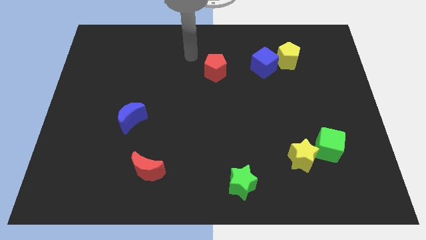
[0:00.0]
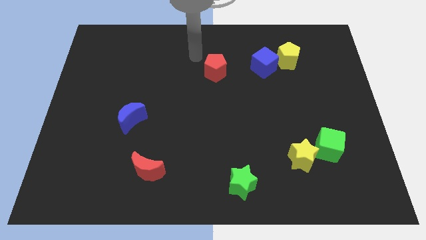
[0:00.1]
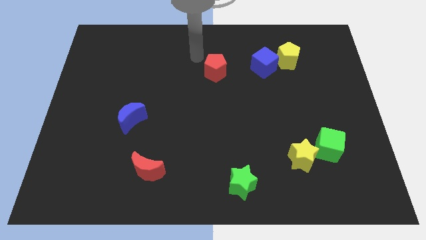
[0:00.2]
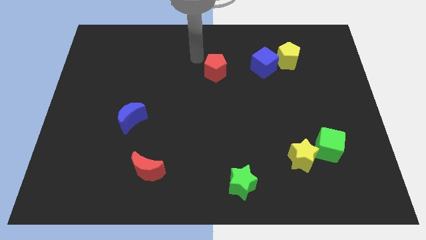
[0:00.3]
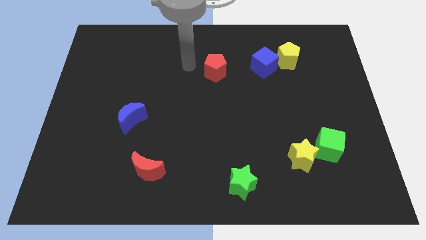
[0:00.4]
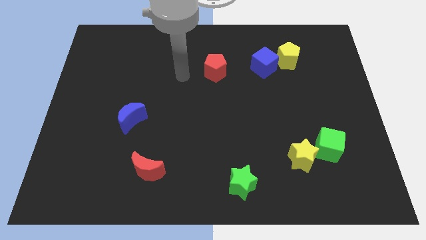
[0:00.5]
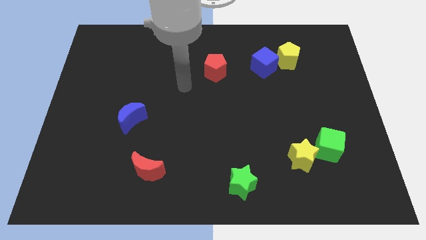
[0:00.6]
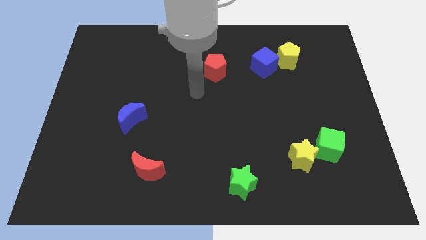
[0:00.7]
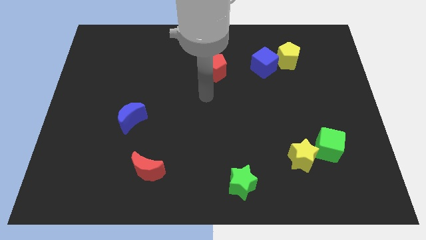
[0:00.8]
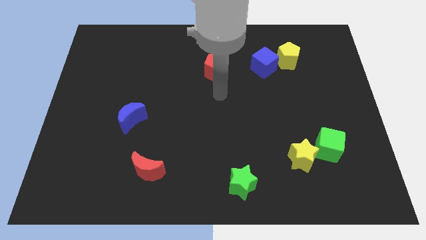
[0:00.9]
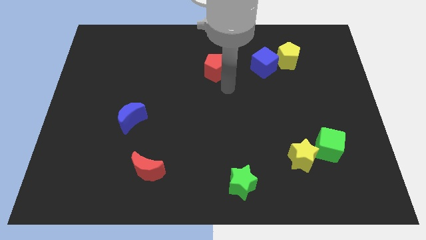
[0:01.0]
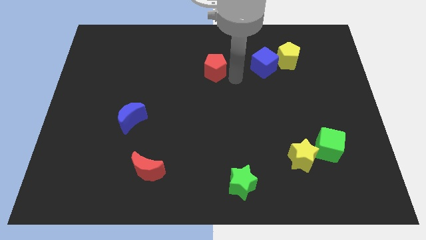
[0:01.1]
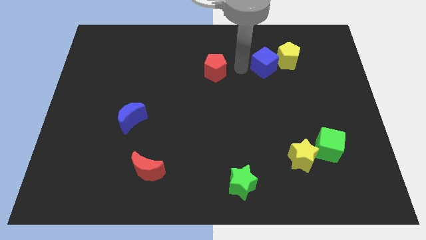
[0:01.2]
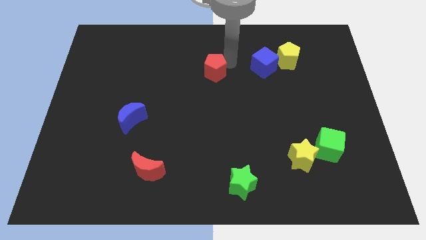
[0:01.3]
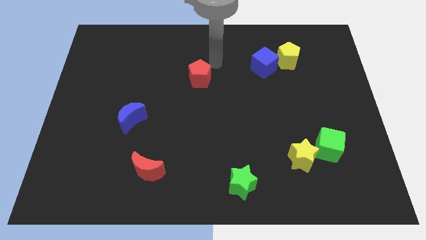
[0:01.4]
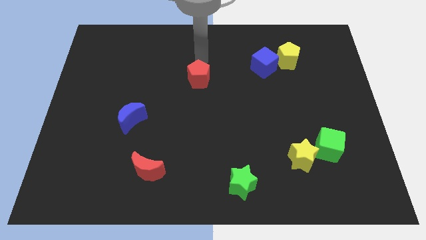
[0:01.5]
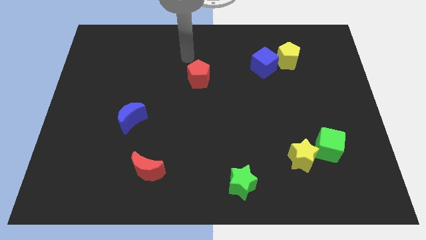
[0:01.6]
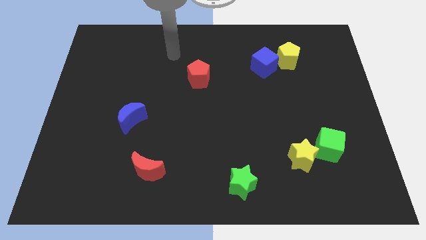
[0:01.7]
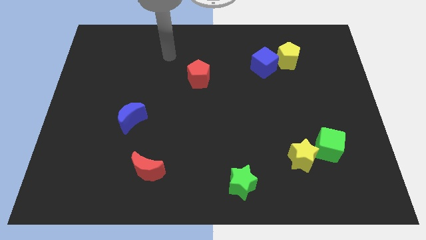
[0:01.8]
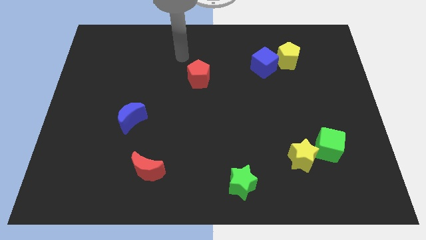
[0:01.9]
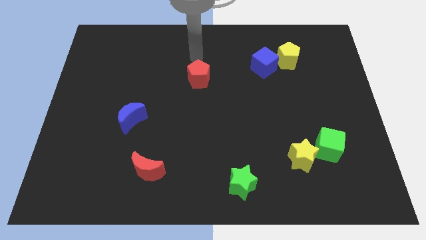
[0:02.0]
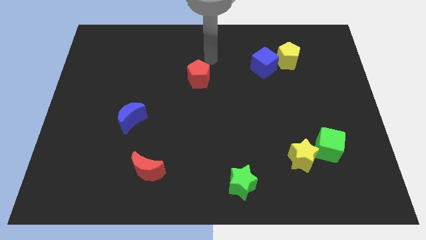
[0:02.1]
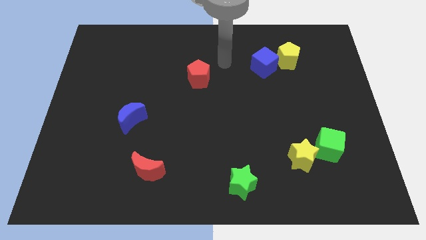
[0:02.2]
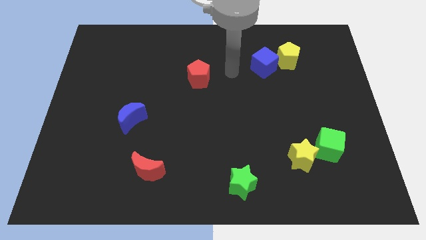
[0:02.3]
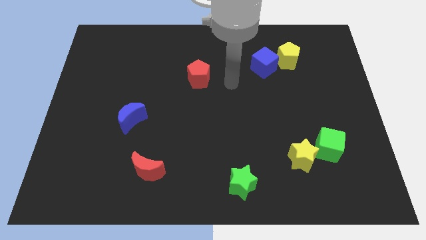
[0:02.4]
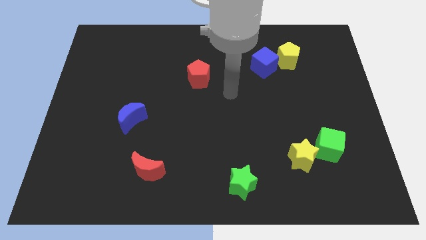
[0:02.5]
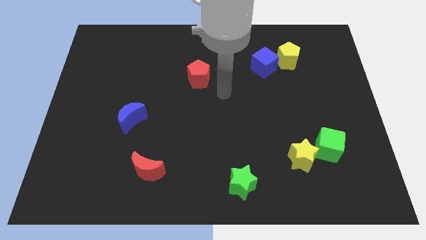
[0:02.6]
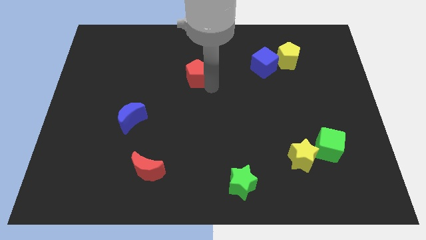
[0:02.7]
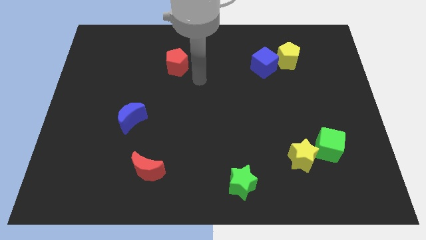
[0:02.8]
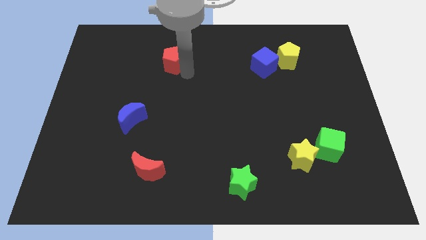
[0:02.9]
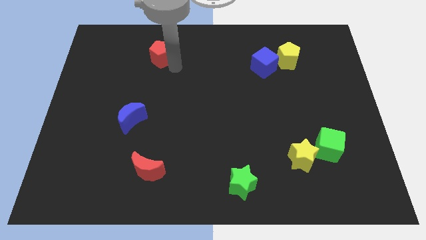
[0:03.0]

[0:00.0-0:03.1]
move the red pentagon towards top

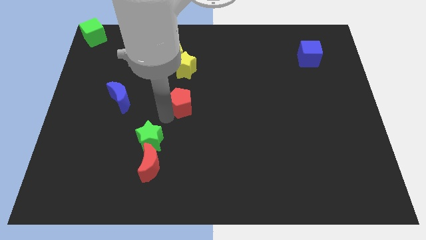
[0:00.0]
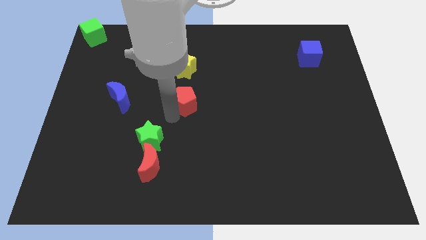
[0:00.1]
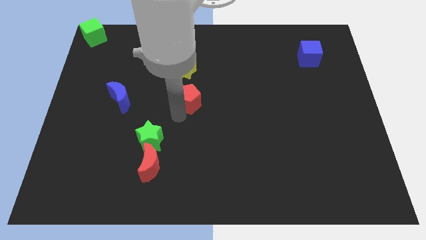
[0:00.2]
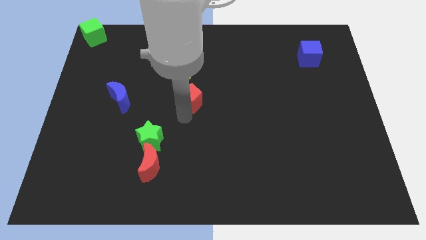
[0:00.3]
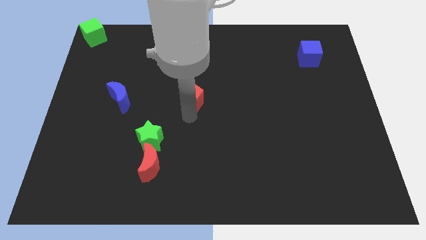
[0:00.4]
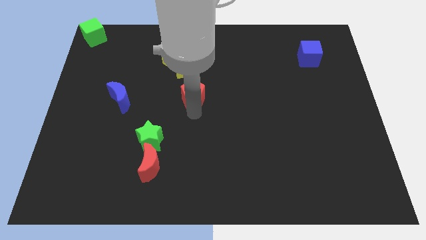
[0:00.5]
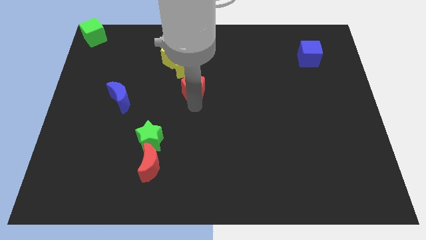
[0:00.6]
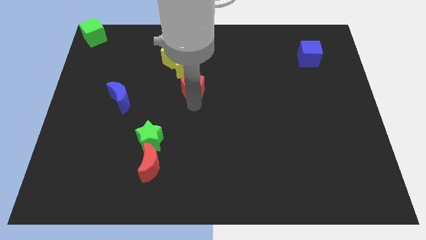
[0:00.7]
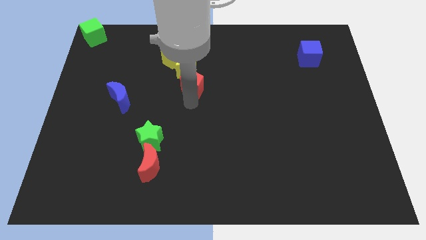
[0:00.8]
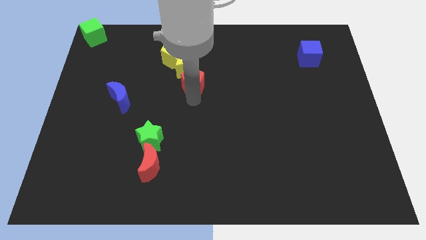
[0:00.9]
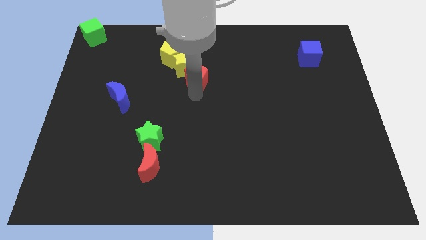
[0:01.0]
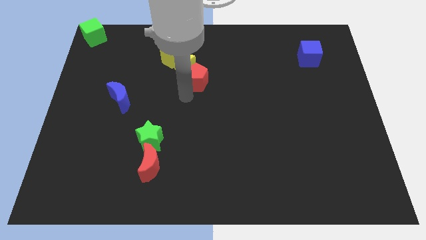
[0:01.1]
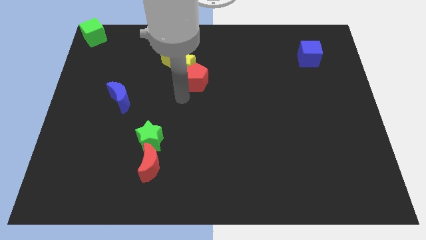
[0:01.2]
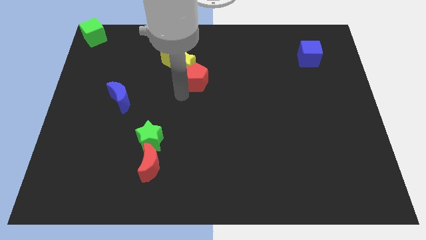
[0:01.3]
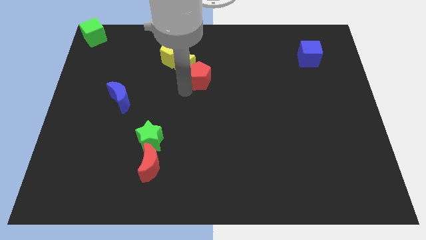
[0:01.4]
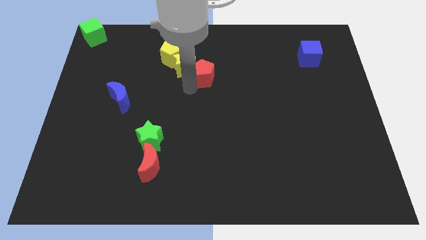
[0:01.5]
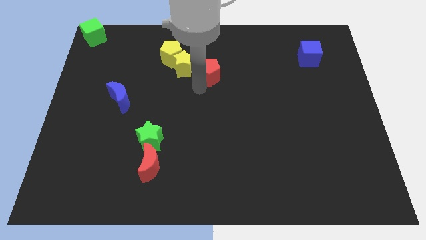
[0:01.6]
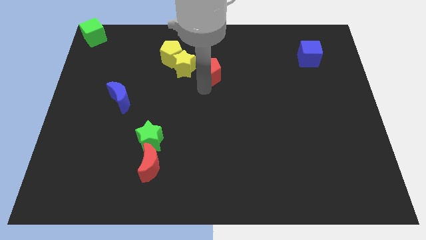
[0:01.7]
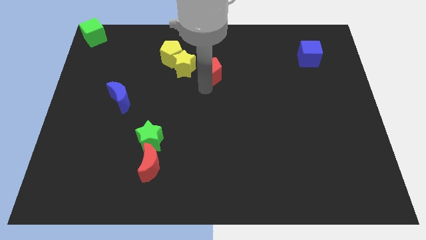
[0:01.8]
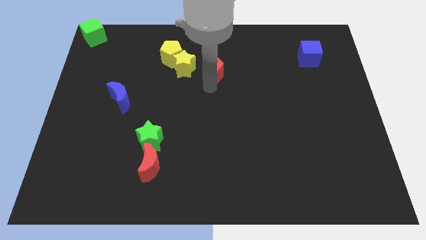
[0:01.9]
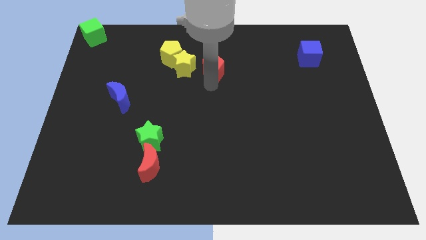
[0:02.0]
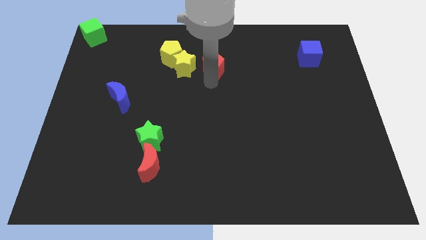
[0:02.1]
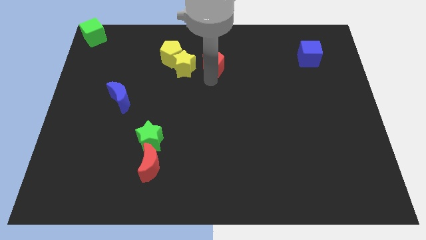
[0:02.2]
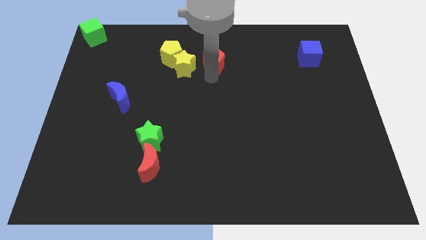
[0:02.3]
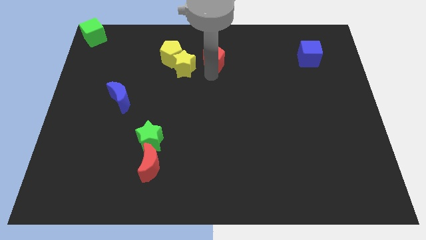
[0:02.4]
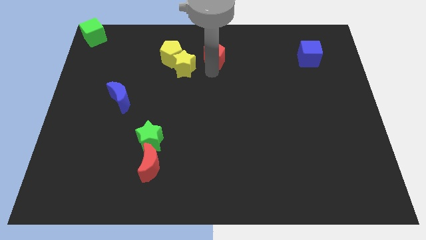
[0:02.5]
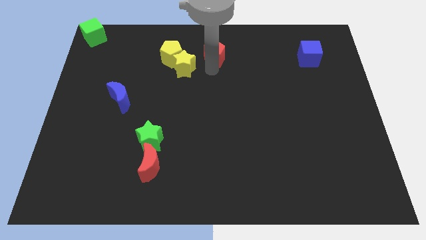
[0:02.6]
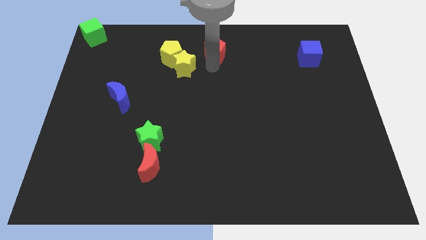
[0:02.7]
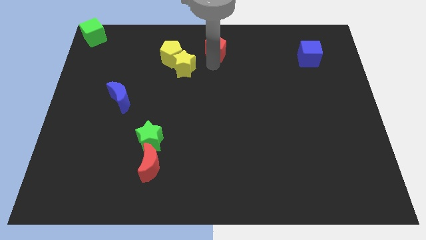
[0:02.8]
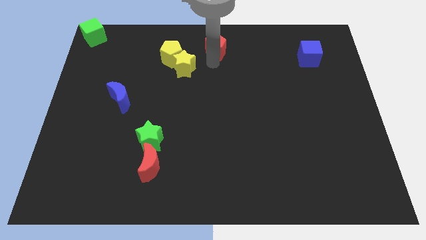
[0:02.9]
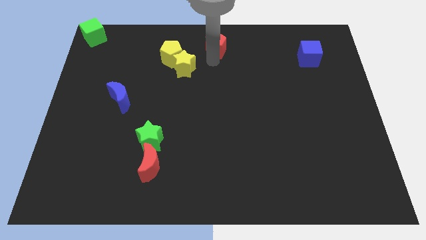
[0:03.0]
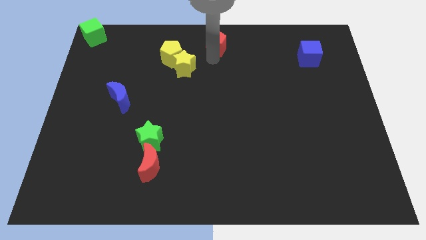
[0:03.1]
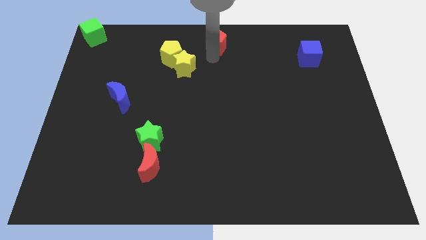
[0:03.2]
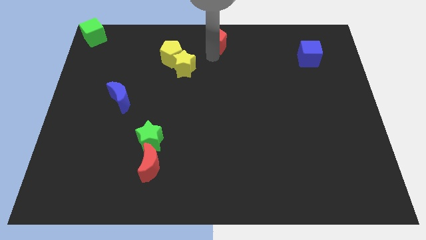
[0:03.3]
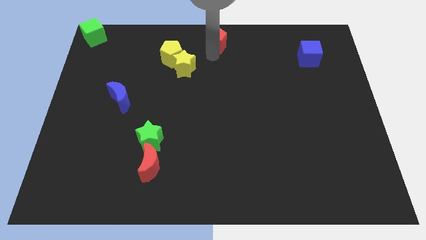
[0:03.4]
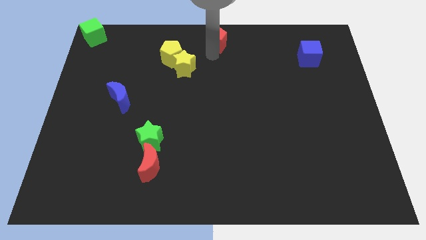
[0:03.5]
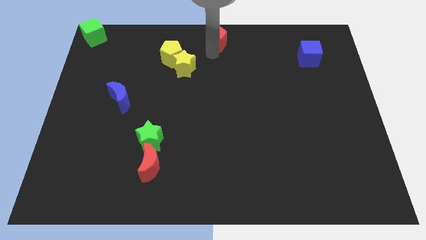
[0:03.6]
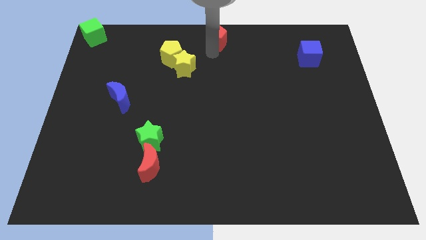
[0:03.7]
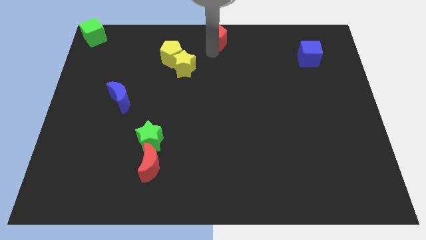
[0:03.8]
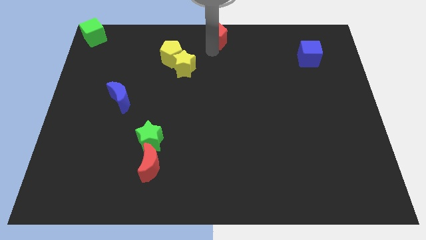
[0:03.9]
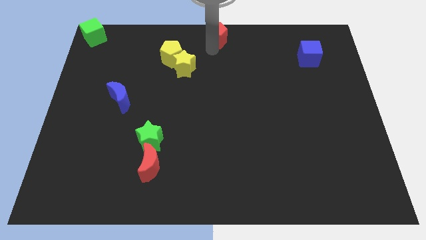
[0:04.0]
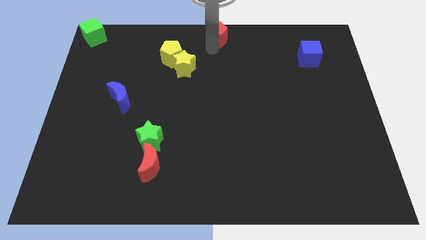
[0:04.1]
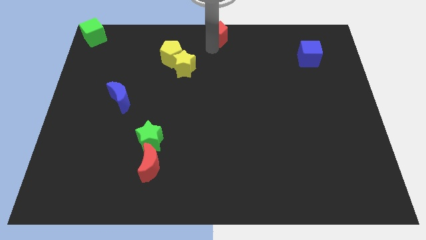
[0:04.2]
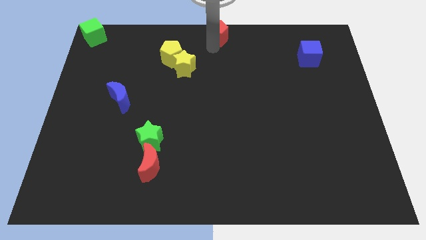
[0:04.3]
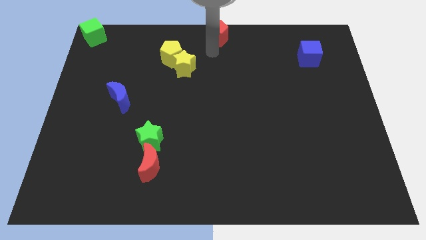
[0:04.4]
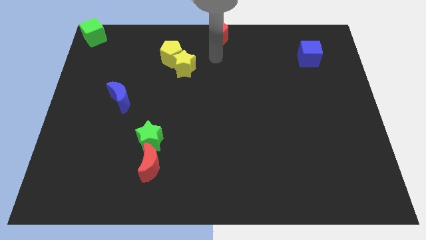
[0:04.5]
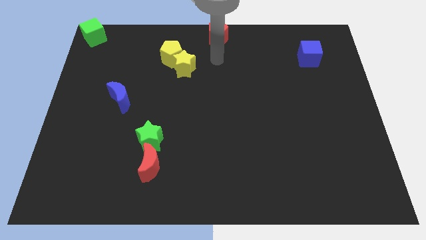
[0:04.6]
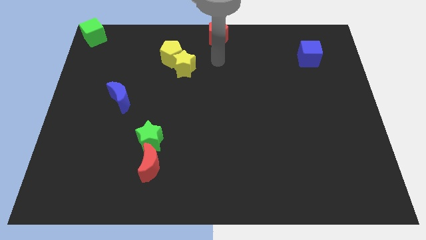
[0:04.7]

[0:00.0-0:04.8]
place the red pentagon towards the top center of the board

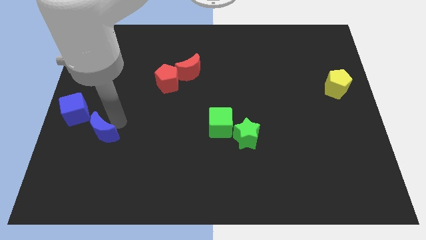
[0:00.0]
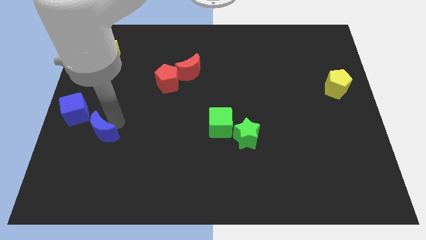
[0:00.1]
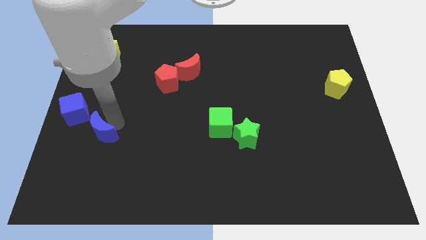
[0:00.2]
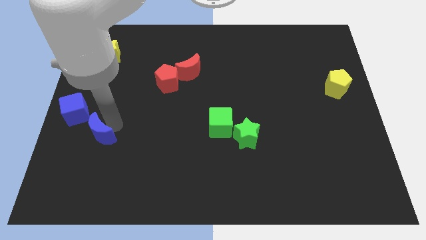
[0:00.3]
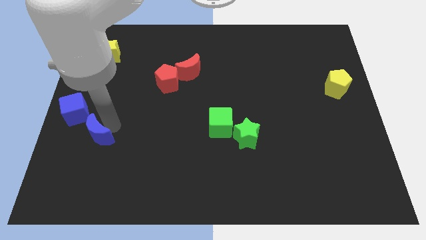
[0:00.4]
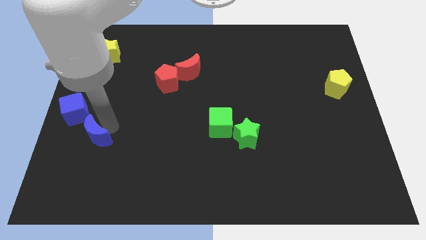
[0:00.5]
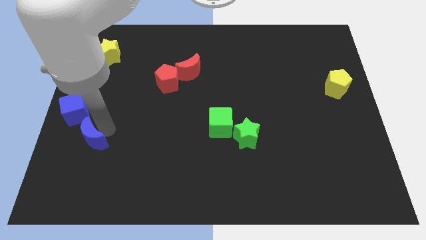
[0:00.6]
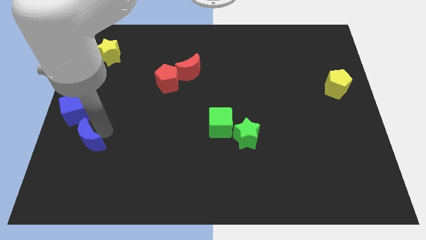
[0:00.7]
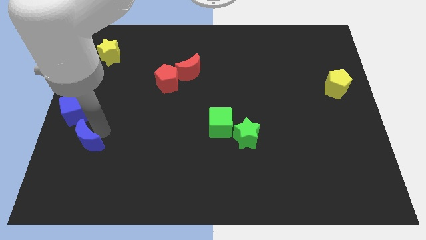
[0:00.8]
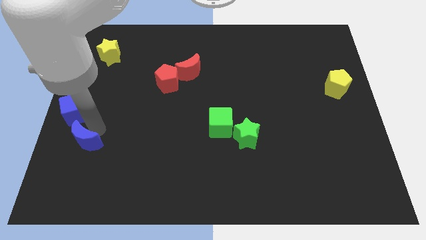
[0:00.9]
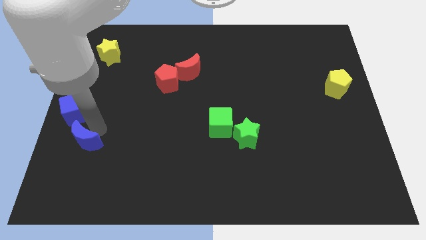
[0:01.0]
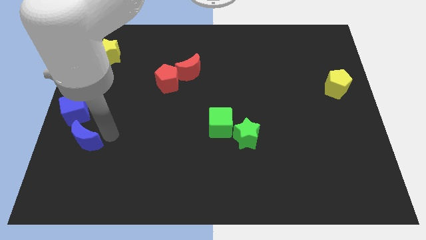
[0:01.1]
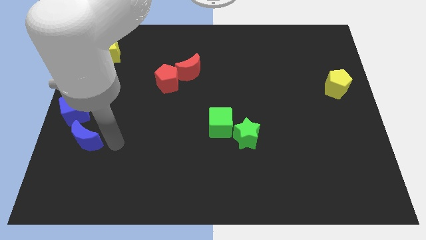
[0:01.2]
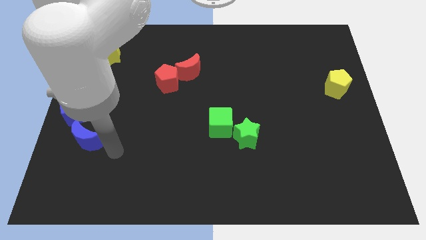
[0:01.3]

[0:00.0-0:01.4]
place blue moon to the bottom of blue cube
